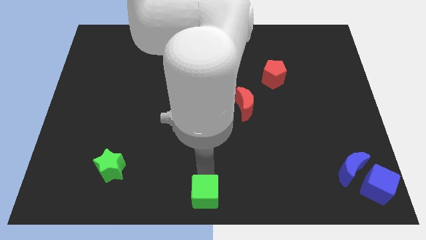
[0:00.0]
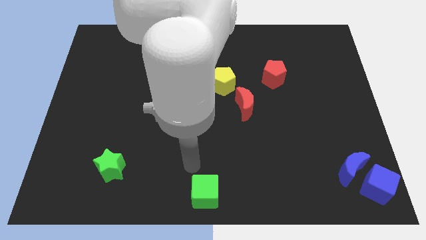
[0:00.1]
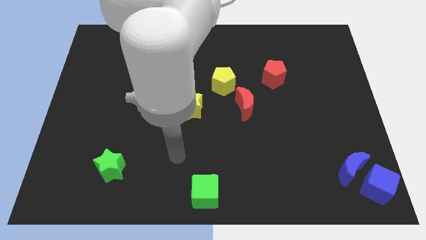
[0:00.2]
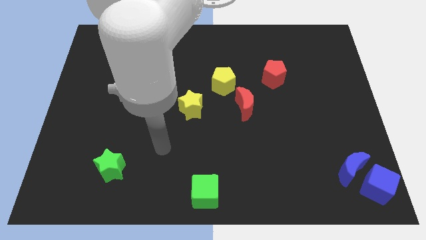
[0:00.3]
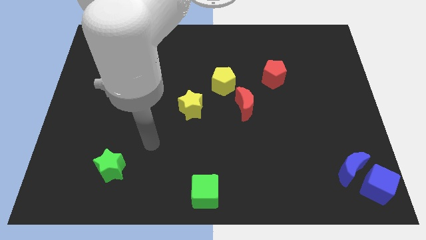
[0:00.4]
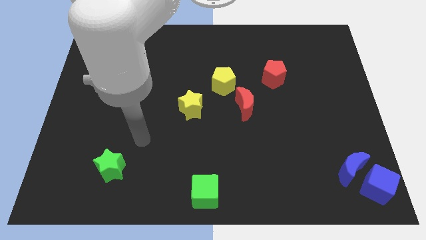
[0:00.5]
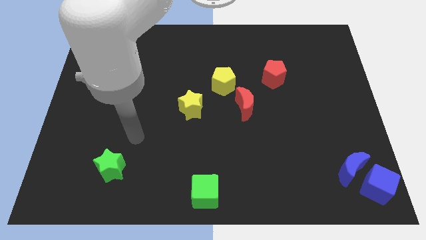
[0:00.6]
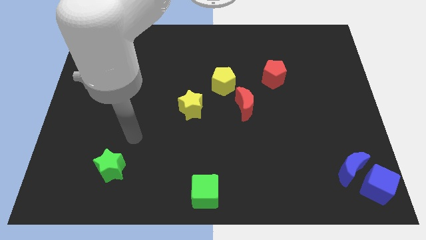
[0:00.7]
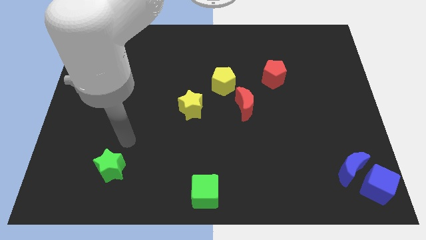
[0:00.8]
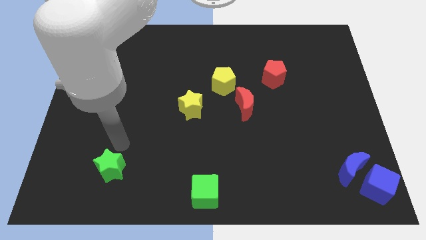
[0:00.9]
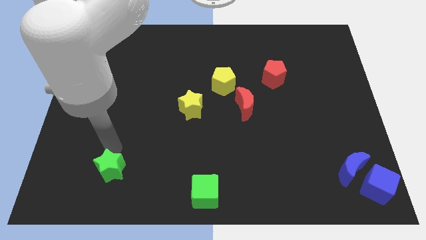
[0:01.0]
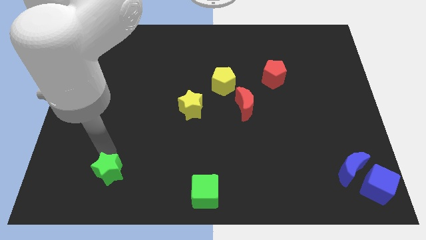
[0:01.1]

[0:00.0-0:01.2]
point your arm at the top of green star

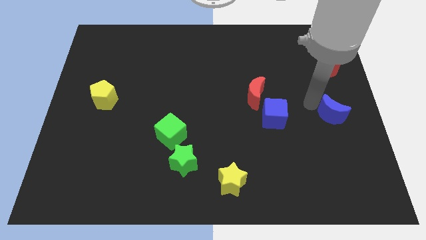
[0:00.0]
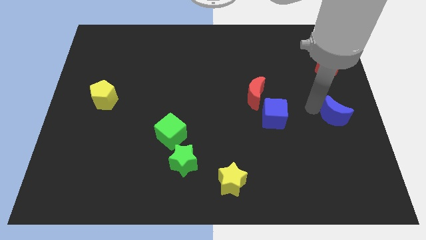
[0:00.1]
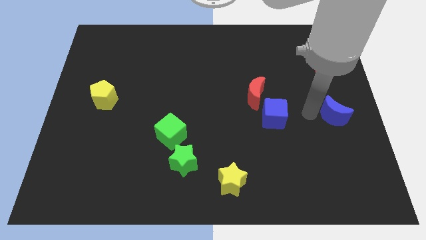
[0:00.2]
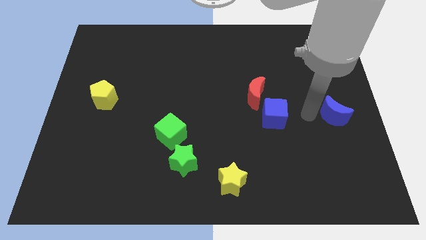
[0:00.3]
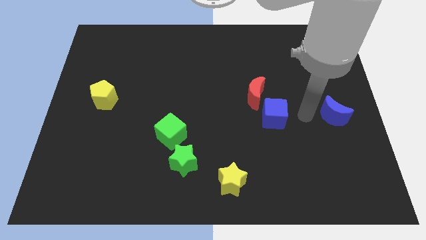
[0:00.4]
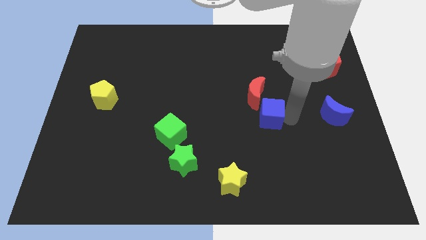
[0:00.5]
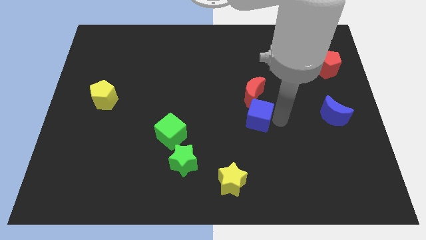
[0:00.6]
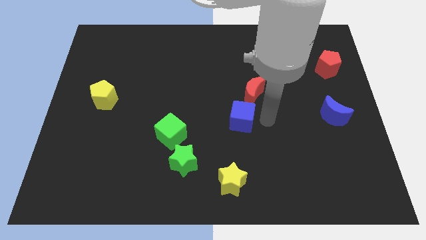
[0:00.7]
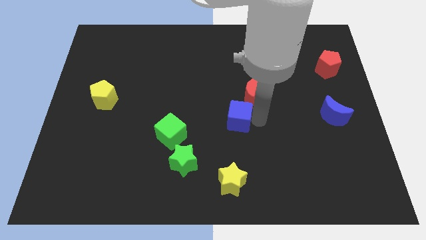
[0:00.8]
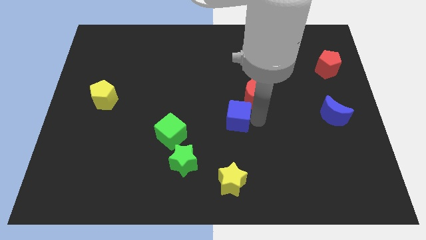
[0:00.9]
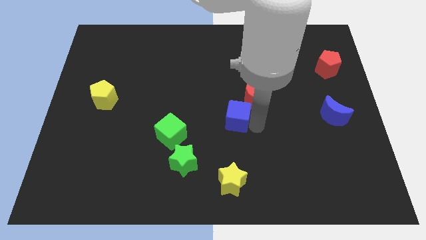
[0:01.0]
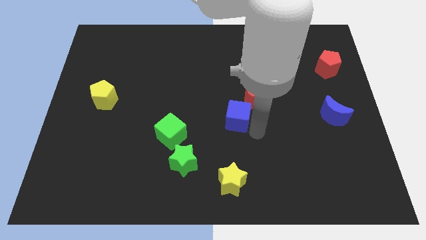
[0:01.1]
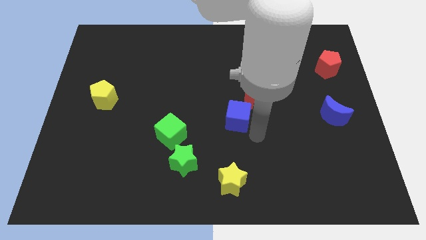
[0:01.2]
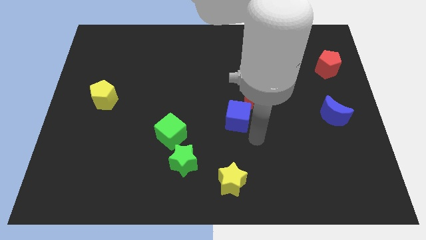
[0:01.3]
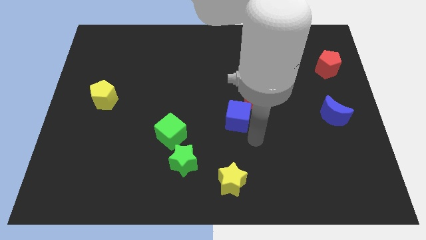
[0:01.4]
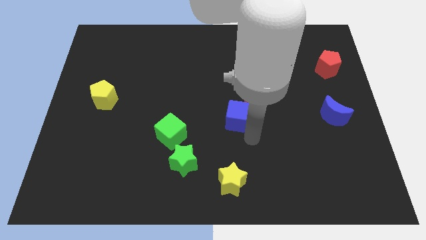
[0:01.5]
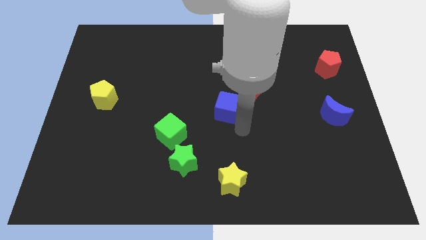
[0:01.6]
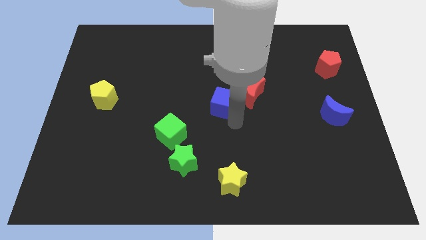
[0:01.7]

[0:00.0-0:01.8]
move the blue cube diagonally bottom left to the red moon

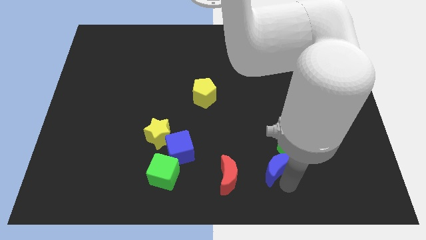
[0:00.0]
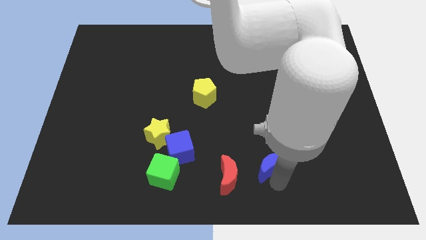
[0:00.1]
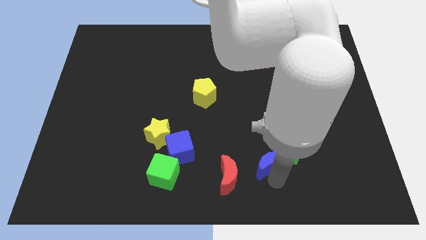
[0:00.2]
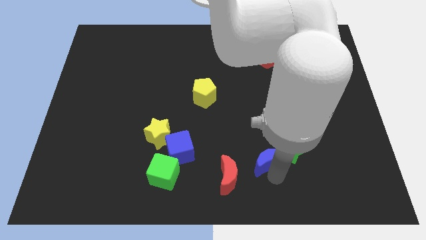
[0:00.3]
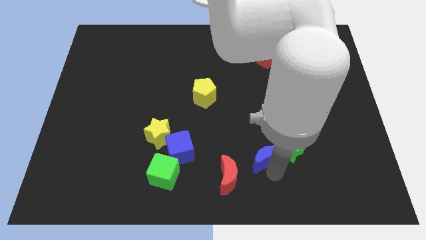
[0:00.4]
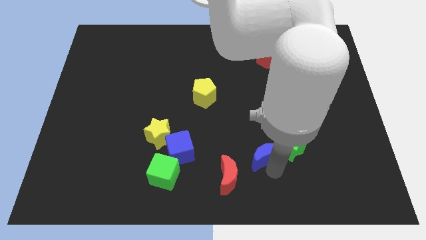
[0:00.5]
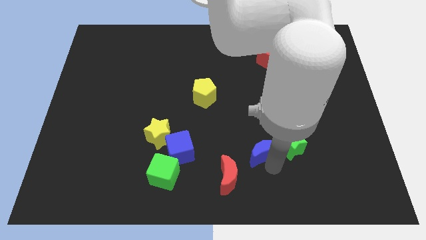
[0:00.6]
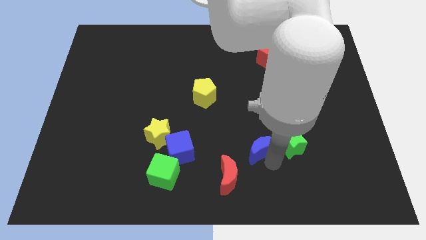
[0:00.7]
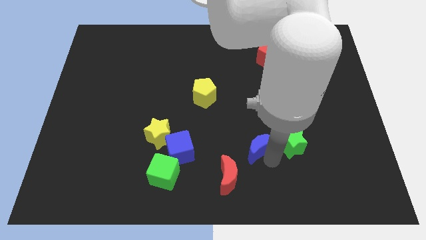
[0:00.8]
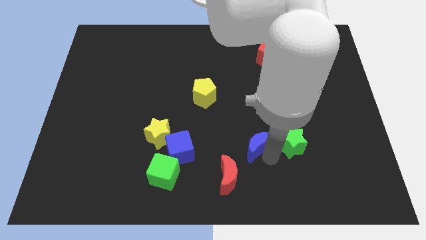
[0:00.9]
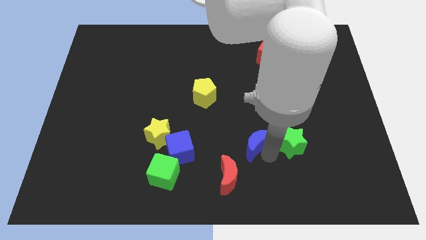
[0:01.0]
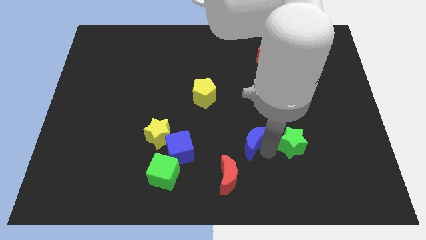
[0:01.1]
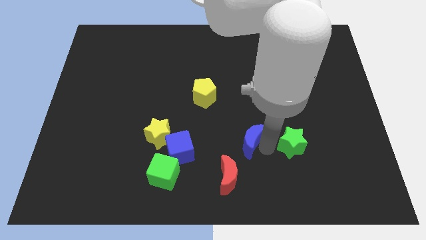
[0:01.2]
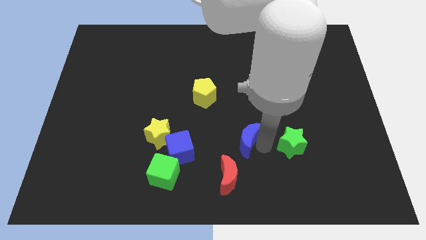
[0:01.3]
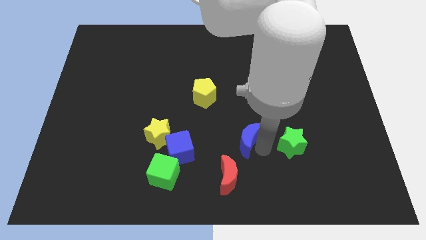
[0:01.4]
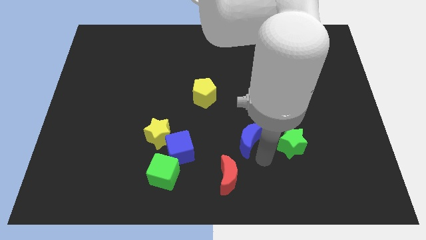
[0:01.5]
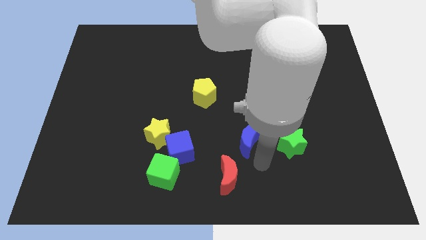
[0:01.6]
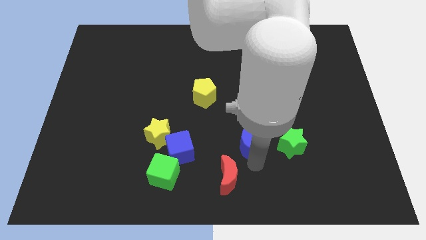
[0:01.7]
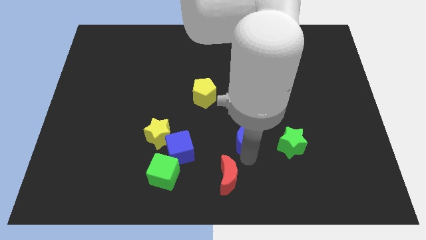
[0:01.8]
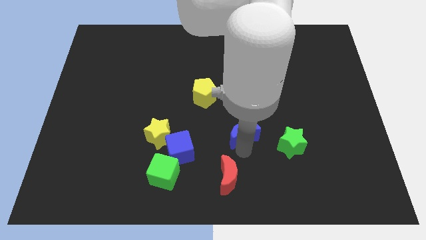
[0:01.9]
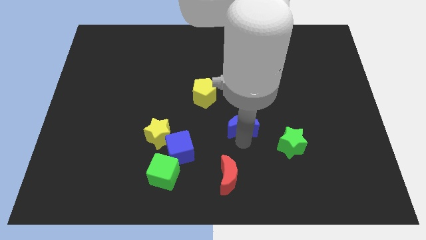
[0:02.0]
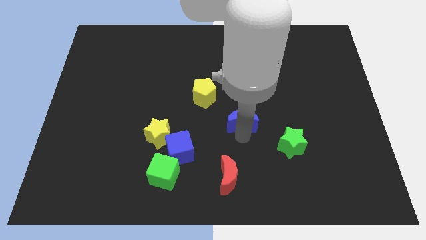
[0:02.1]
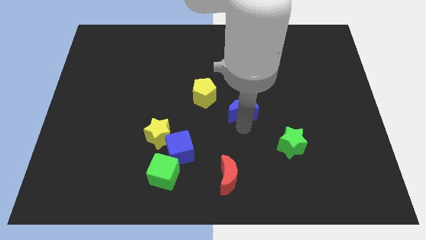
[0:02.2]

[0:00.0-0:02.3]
separate the blue moon from the green star

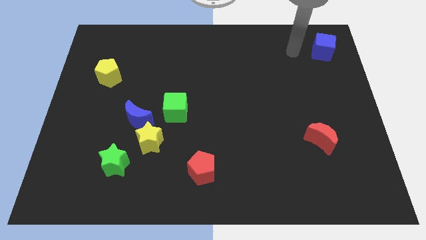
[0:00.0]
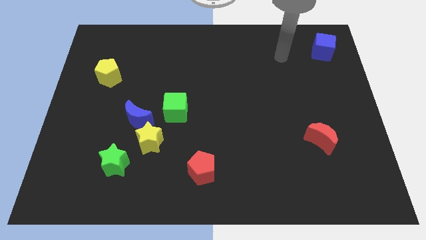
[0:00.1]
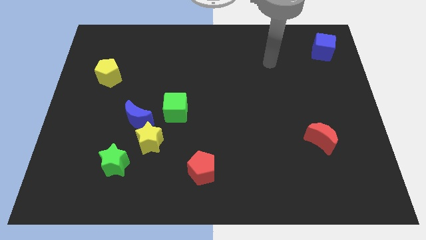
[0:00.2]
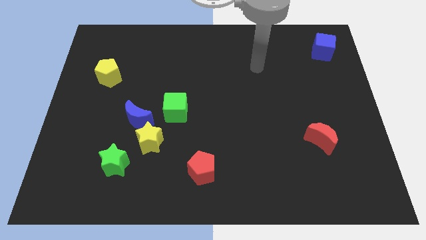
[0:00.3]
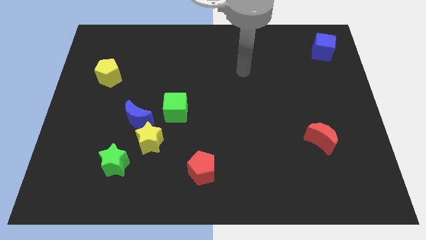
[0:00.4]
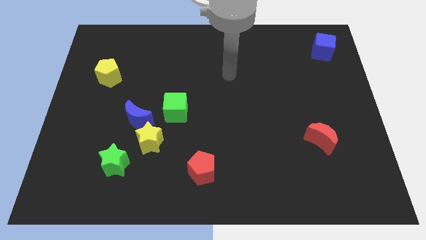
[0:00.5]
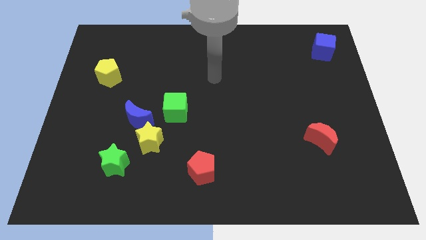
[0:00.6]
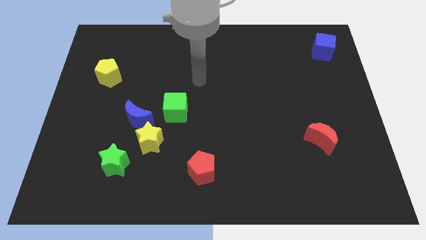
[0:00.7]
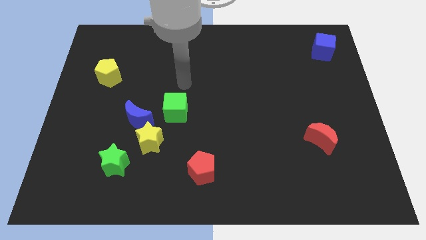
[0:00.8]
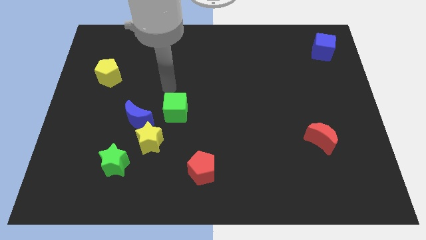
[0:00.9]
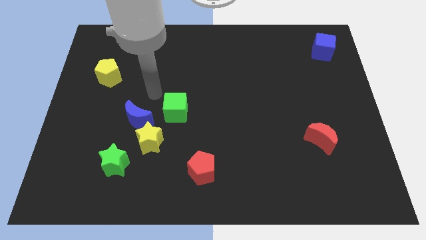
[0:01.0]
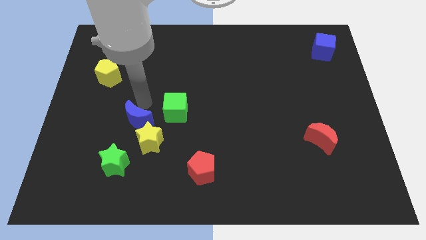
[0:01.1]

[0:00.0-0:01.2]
move your arm towards the blue crescent

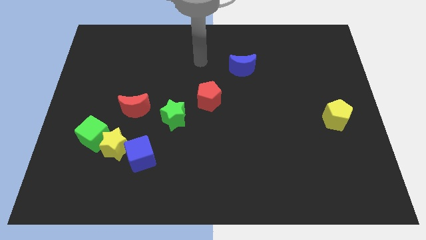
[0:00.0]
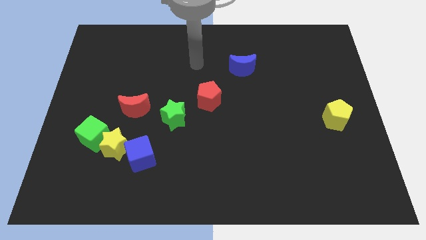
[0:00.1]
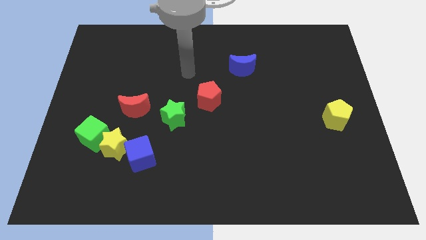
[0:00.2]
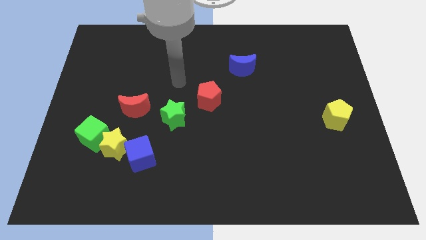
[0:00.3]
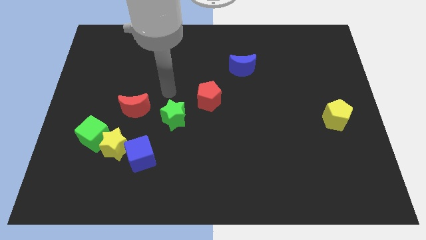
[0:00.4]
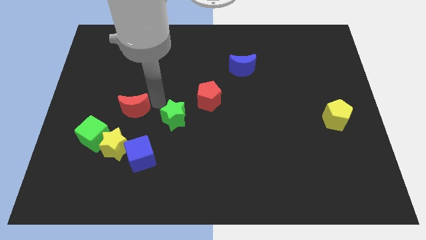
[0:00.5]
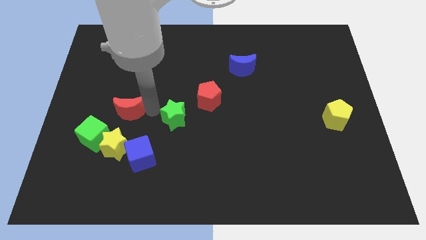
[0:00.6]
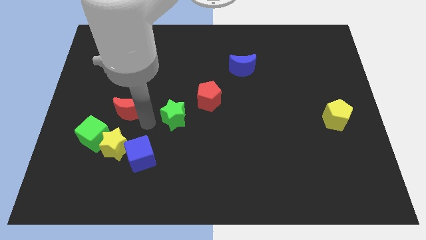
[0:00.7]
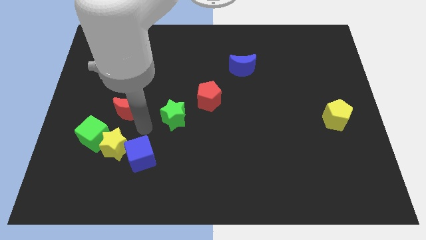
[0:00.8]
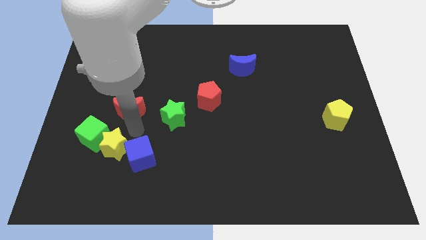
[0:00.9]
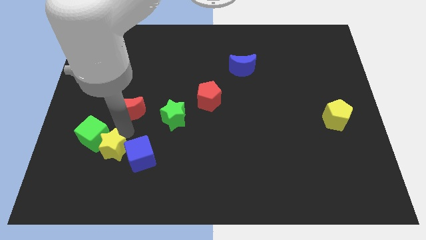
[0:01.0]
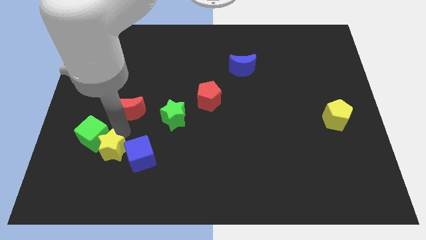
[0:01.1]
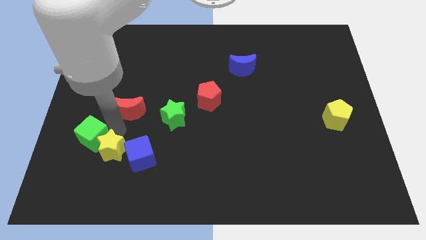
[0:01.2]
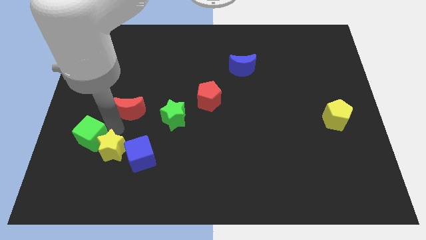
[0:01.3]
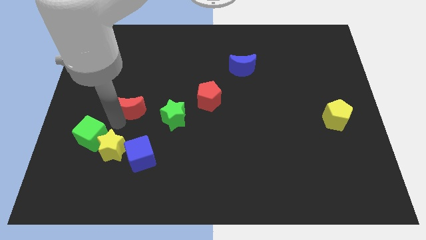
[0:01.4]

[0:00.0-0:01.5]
slight move the red moon

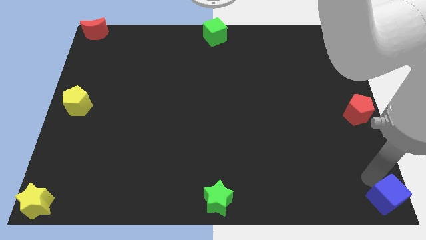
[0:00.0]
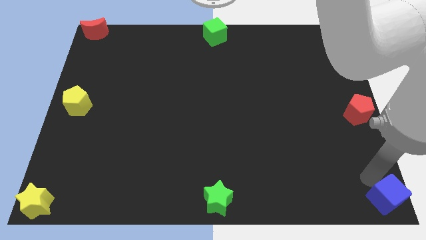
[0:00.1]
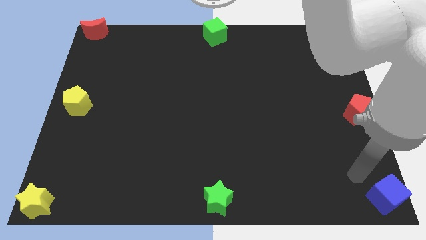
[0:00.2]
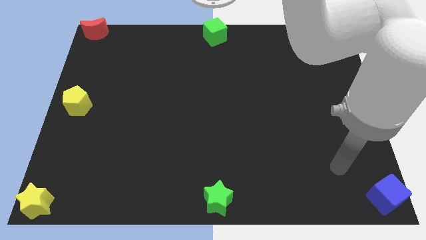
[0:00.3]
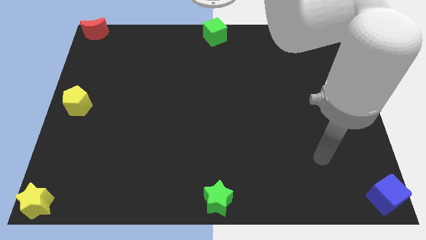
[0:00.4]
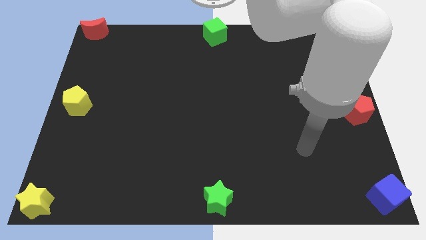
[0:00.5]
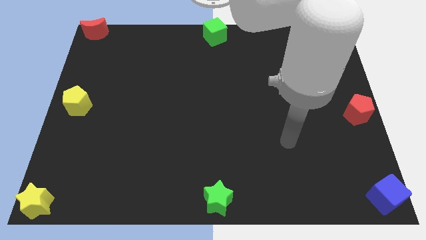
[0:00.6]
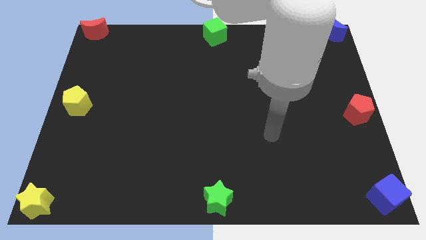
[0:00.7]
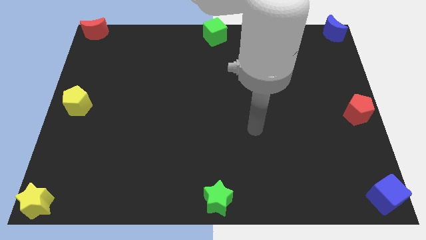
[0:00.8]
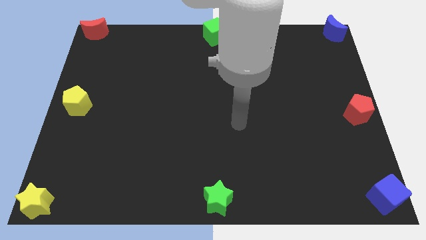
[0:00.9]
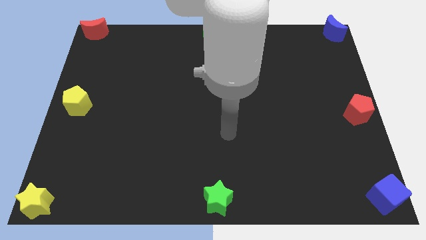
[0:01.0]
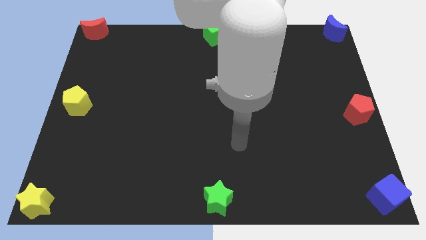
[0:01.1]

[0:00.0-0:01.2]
move your arm away from blue cube
